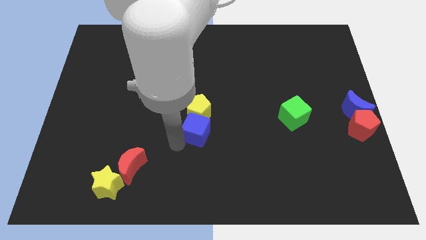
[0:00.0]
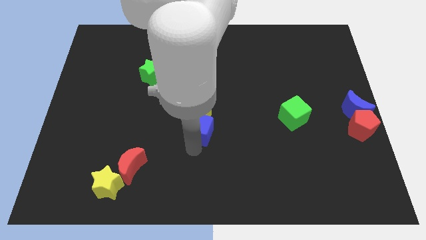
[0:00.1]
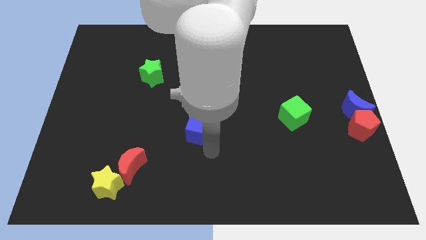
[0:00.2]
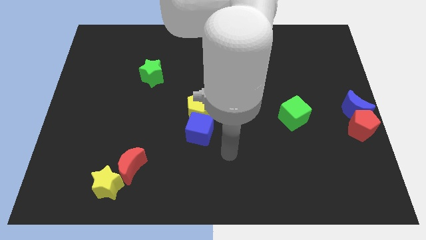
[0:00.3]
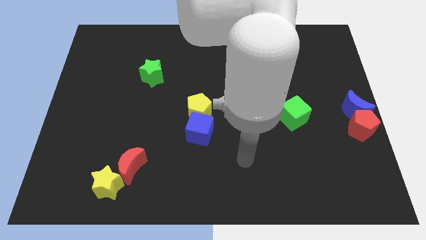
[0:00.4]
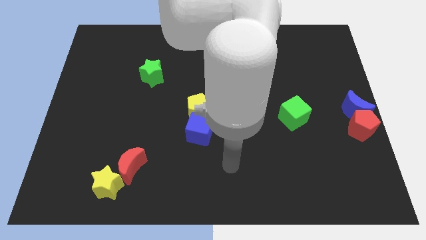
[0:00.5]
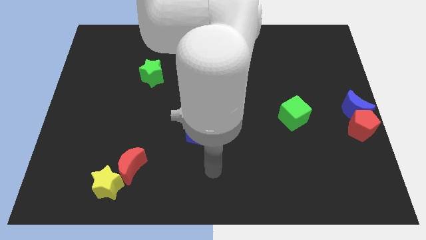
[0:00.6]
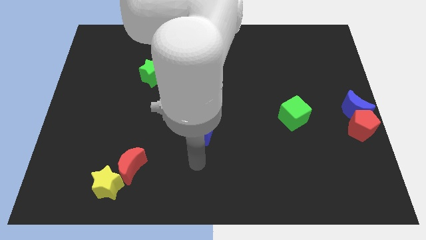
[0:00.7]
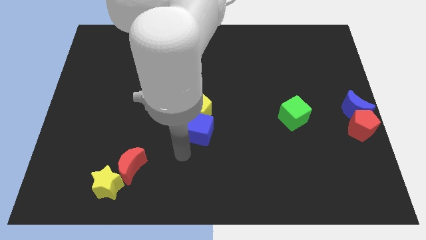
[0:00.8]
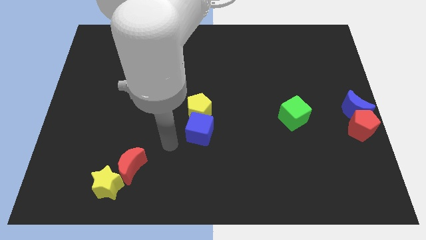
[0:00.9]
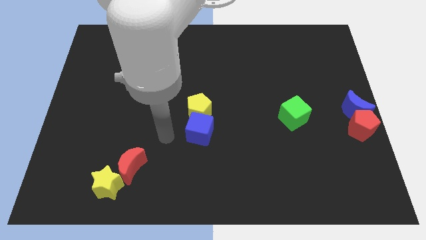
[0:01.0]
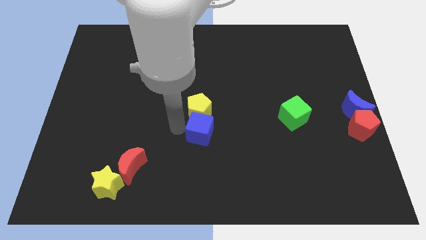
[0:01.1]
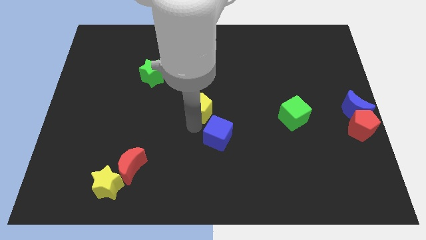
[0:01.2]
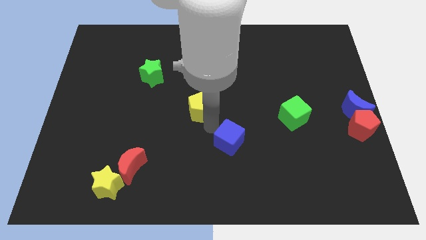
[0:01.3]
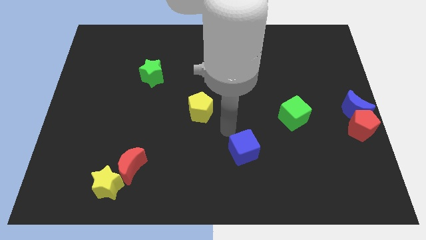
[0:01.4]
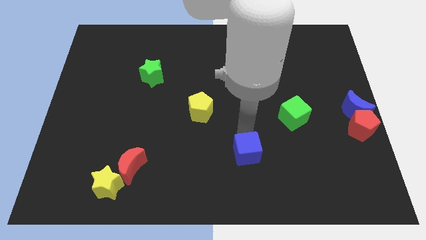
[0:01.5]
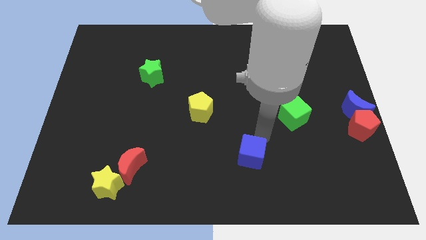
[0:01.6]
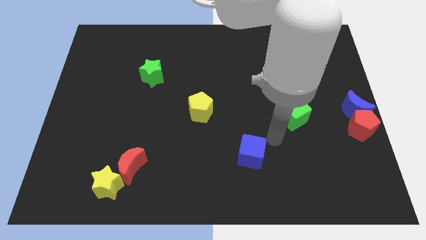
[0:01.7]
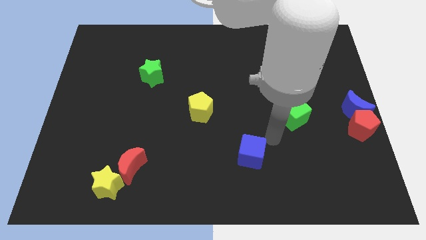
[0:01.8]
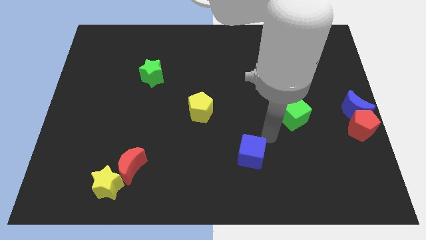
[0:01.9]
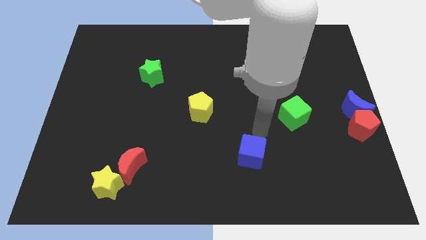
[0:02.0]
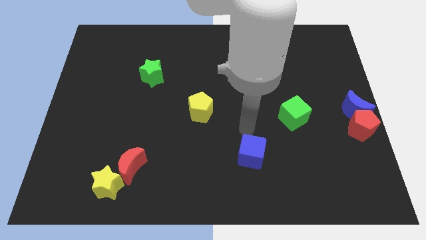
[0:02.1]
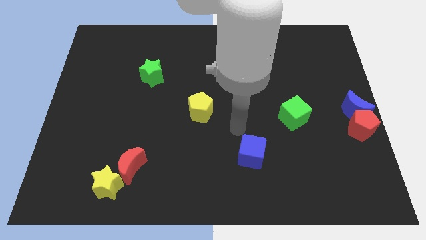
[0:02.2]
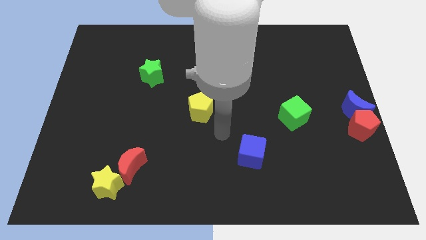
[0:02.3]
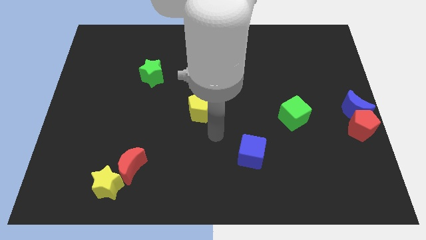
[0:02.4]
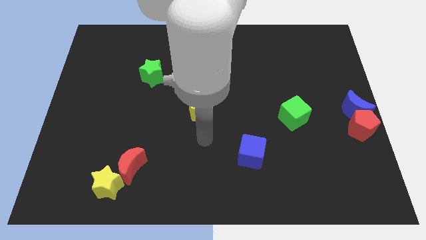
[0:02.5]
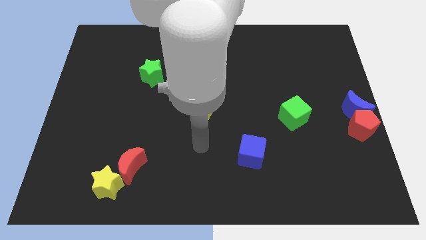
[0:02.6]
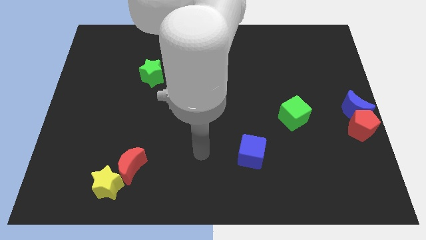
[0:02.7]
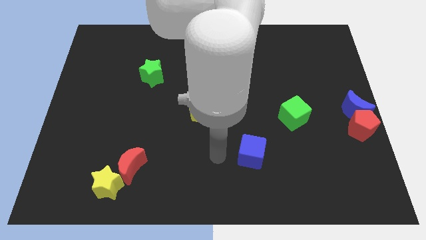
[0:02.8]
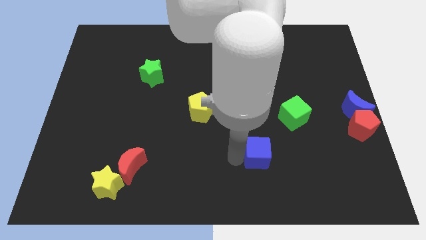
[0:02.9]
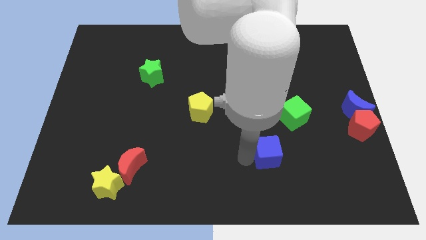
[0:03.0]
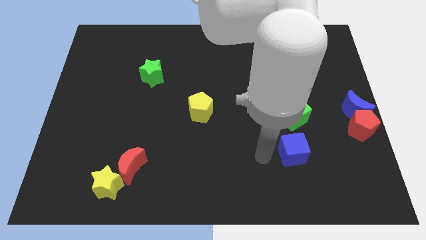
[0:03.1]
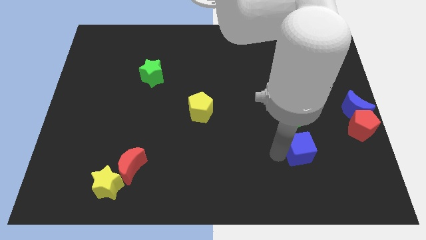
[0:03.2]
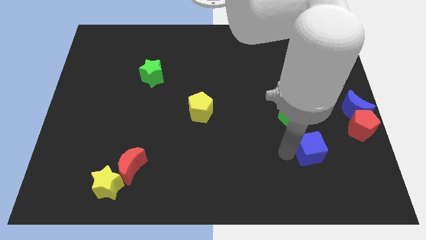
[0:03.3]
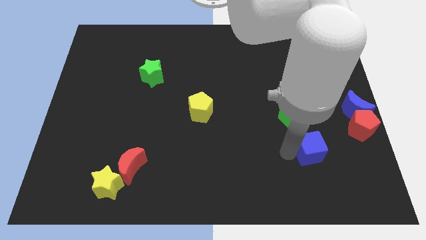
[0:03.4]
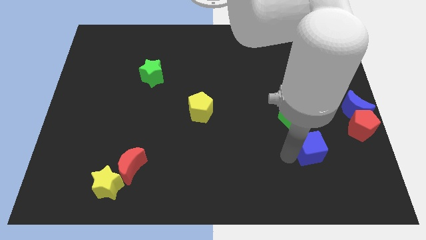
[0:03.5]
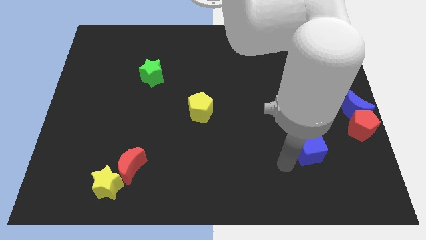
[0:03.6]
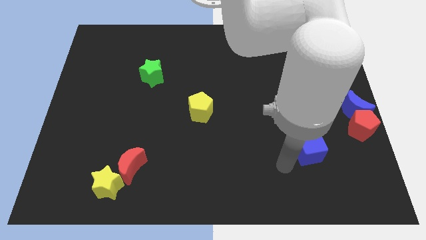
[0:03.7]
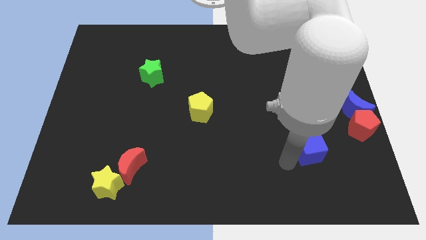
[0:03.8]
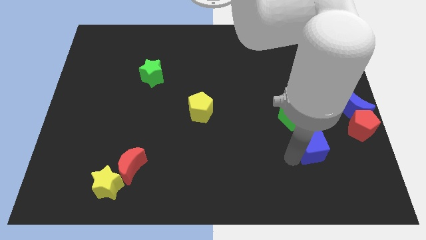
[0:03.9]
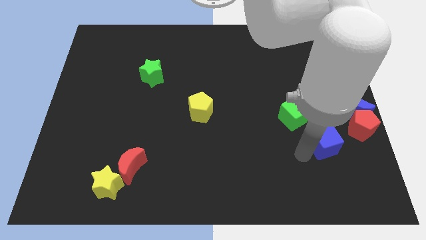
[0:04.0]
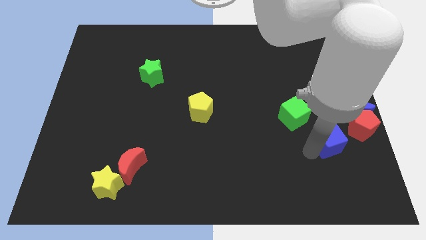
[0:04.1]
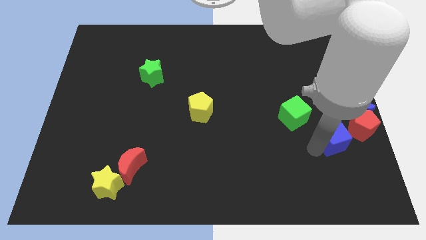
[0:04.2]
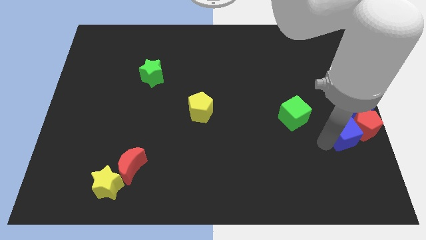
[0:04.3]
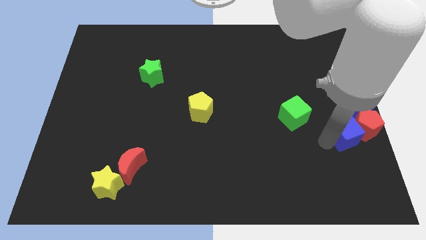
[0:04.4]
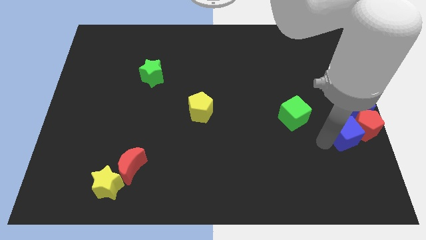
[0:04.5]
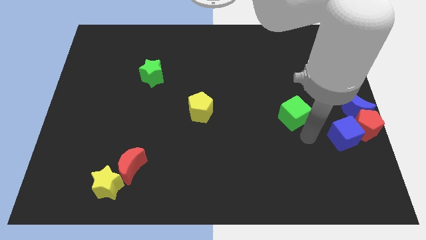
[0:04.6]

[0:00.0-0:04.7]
slide the blue cube into the red pentagon

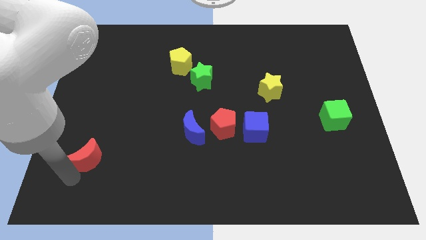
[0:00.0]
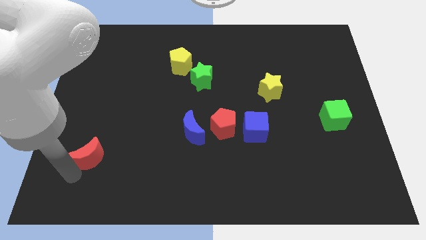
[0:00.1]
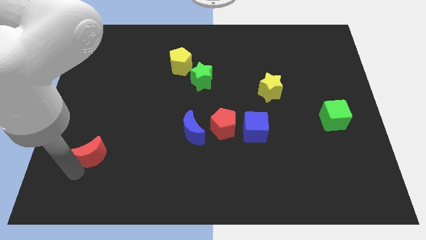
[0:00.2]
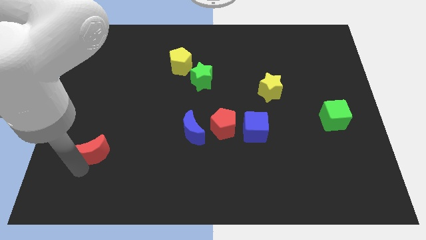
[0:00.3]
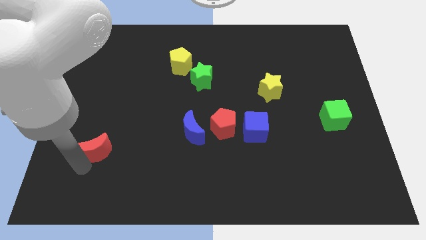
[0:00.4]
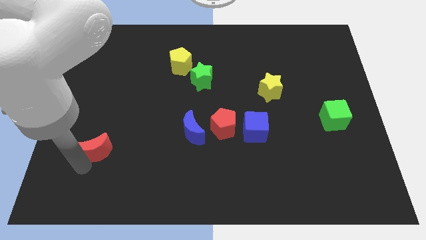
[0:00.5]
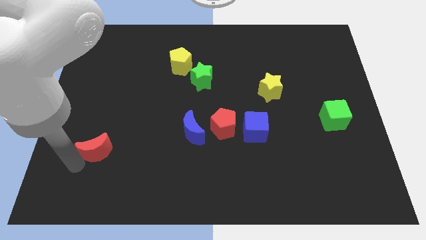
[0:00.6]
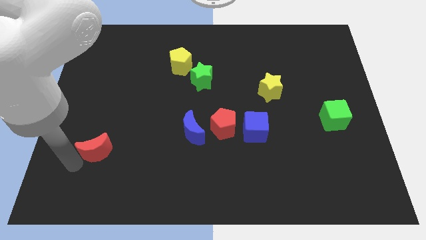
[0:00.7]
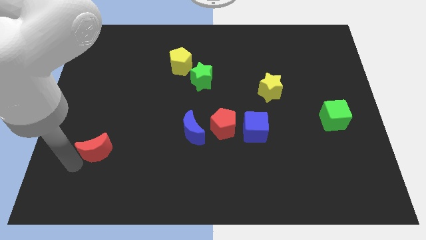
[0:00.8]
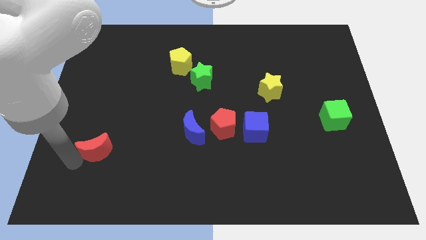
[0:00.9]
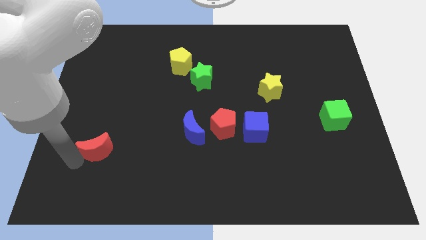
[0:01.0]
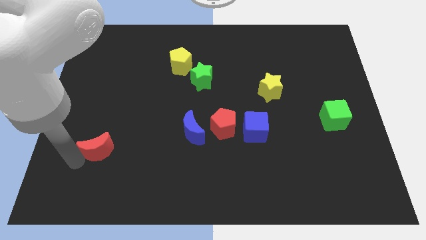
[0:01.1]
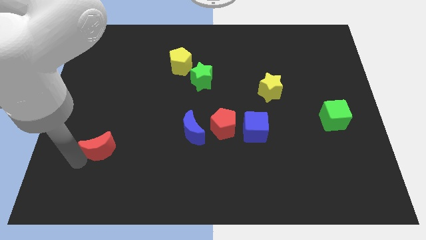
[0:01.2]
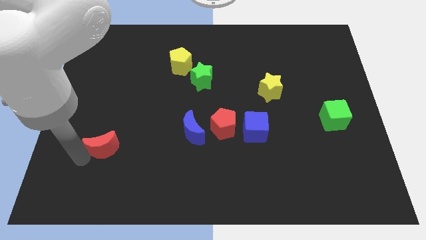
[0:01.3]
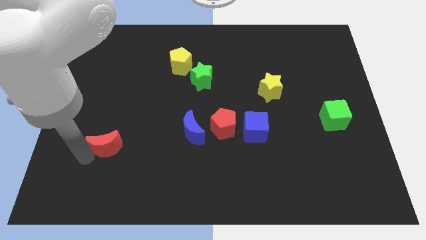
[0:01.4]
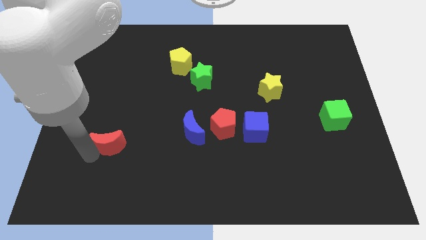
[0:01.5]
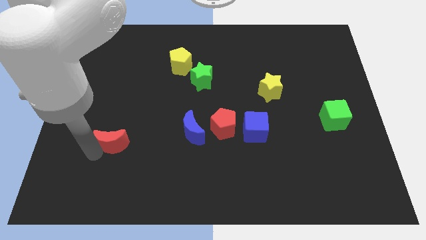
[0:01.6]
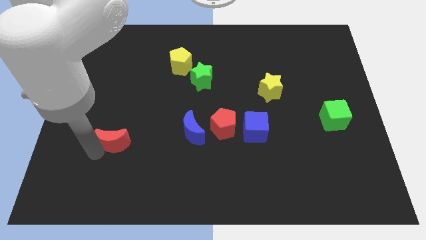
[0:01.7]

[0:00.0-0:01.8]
move the red crescent upwards

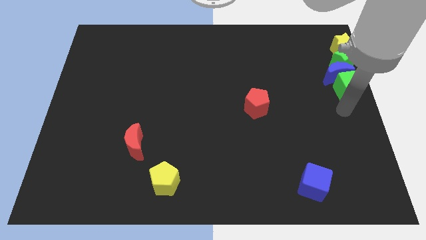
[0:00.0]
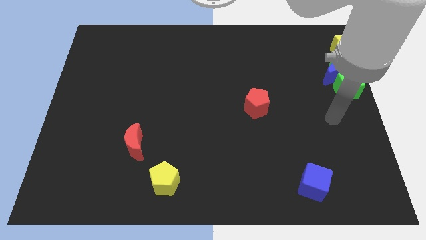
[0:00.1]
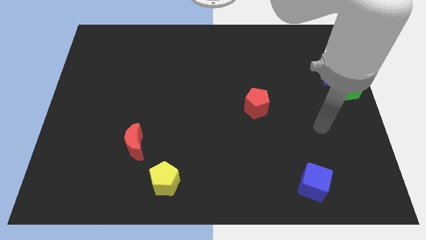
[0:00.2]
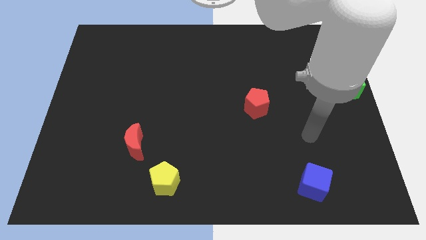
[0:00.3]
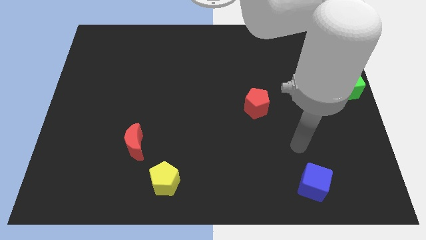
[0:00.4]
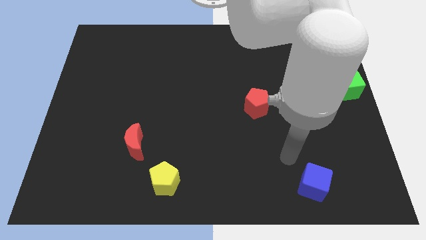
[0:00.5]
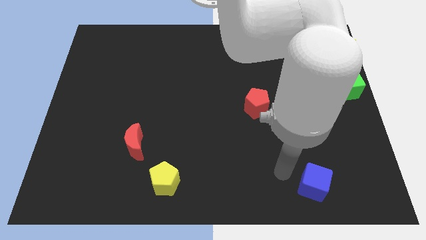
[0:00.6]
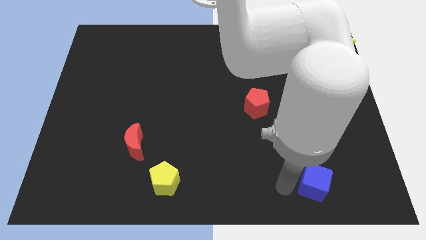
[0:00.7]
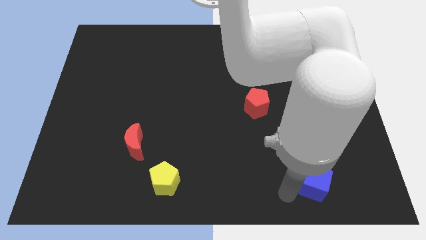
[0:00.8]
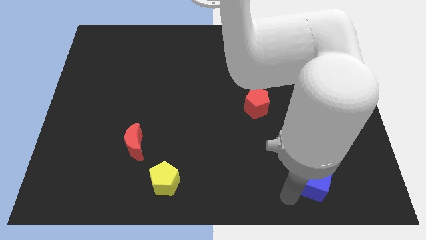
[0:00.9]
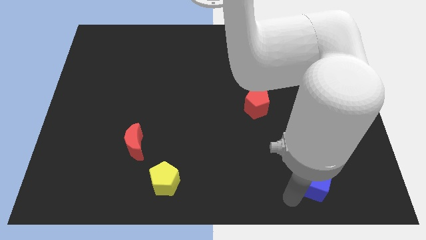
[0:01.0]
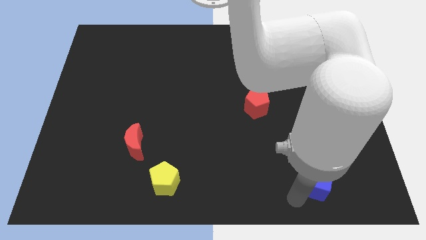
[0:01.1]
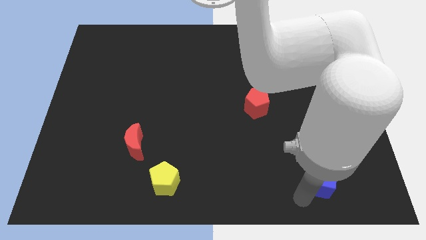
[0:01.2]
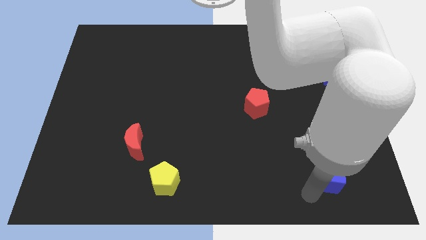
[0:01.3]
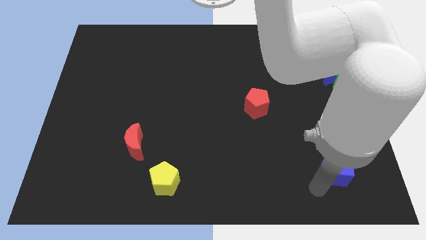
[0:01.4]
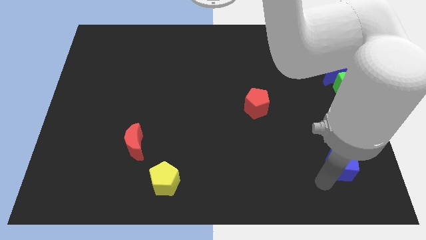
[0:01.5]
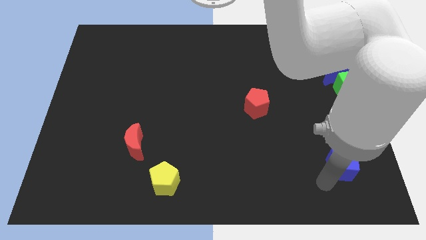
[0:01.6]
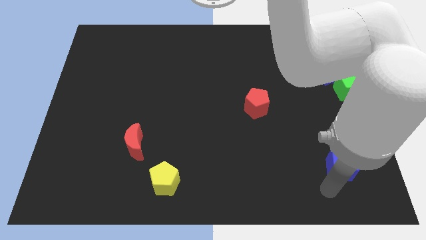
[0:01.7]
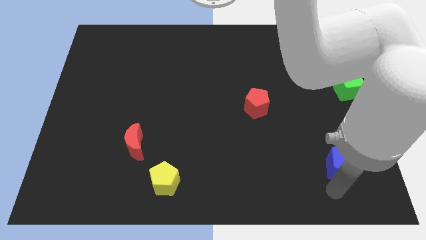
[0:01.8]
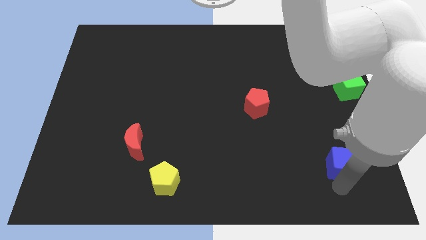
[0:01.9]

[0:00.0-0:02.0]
move the blue cube towards the group of blocks

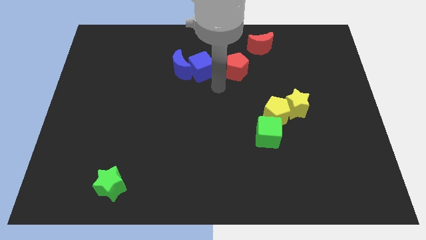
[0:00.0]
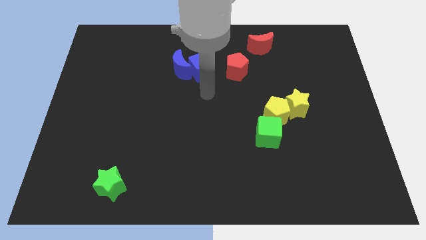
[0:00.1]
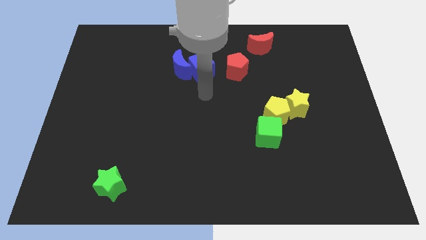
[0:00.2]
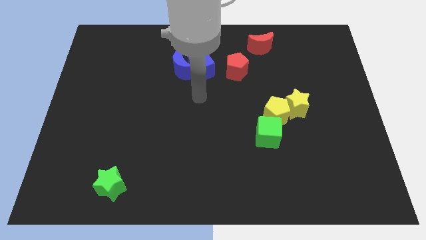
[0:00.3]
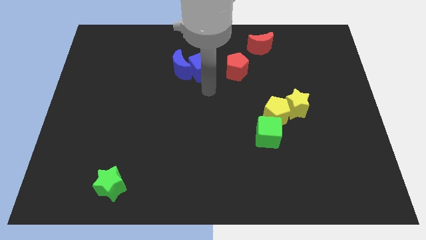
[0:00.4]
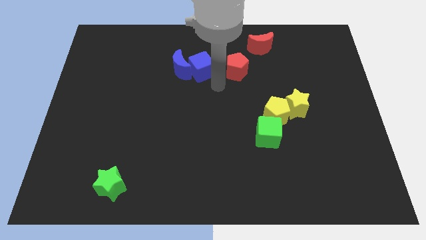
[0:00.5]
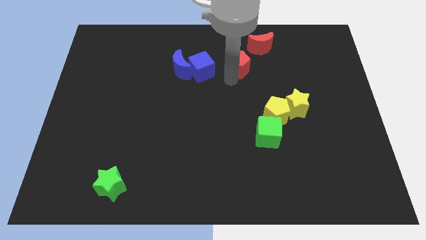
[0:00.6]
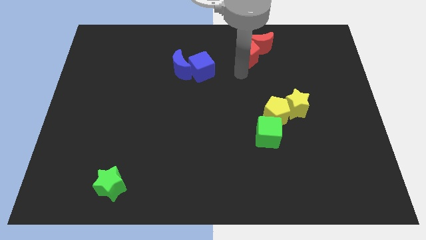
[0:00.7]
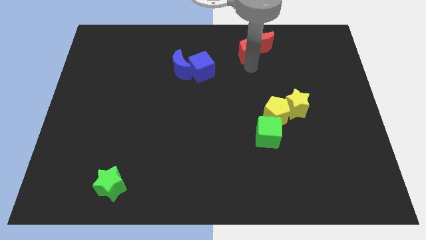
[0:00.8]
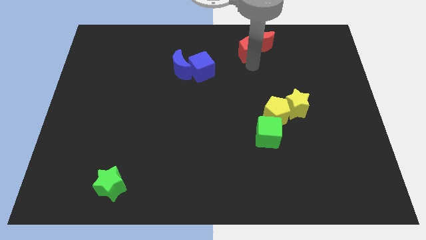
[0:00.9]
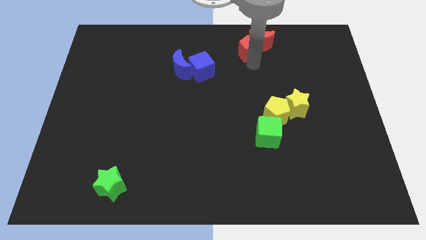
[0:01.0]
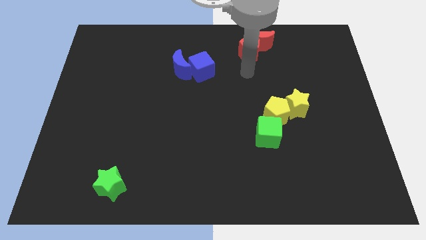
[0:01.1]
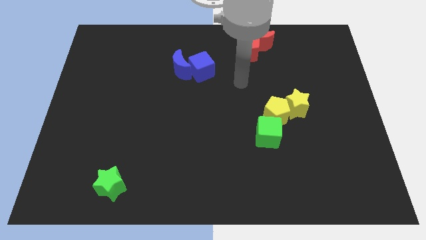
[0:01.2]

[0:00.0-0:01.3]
push the red pentagon into the red crescent
